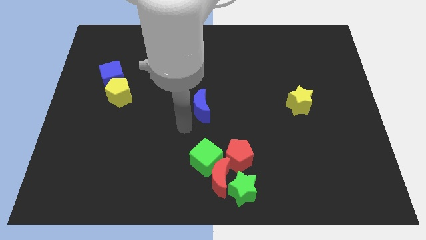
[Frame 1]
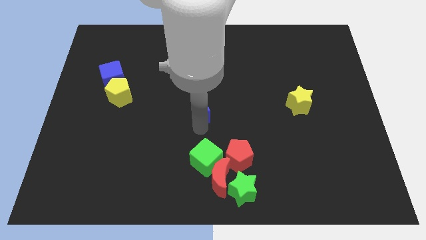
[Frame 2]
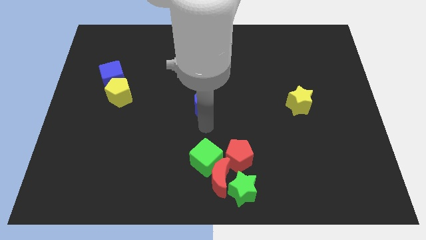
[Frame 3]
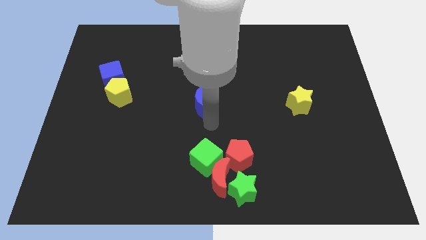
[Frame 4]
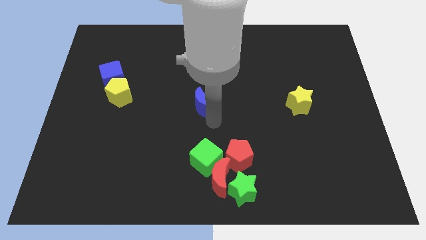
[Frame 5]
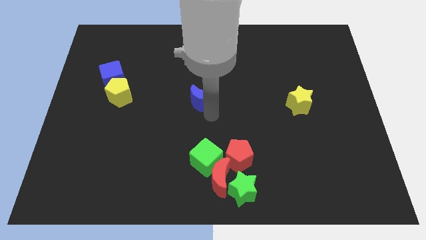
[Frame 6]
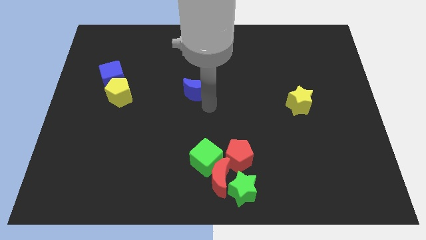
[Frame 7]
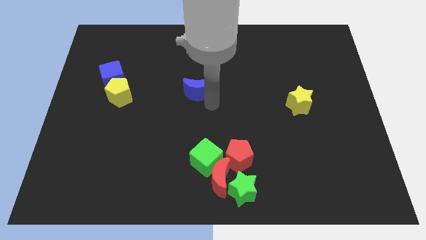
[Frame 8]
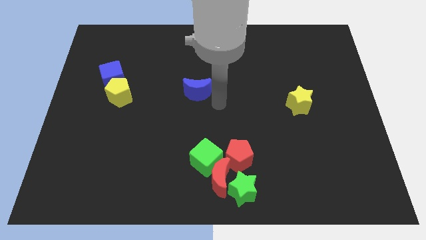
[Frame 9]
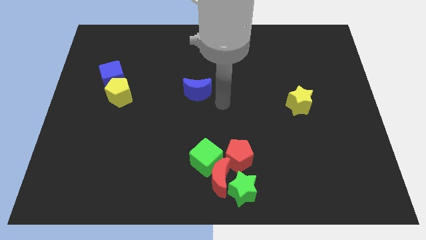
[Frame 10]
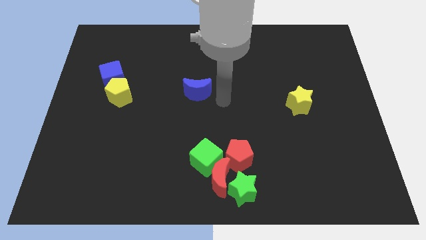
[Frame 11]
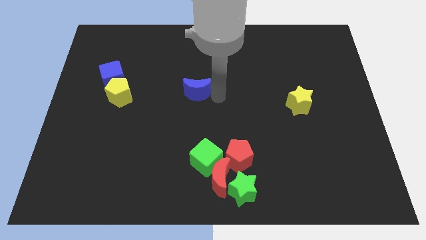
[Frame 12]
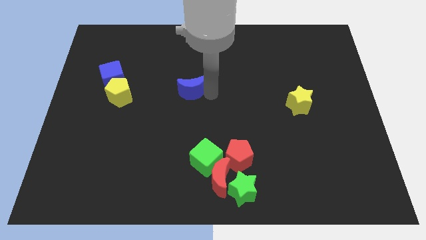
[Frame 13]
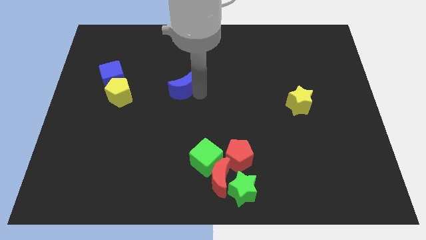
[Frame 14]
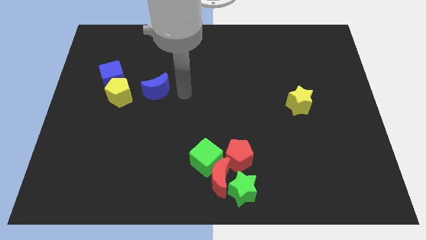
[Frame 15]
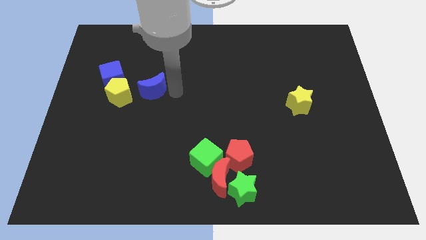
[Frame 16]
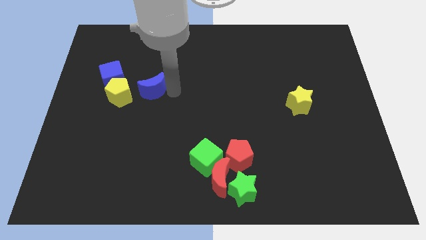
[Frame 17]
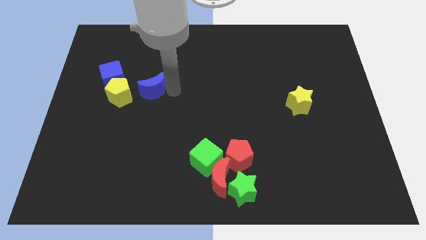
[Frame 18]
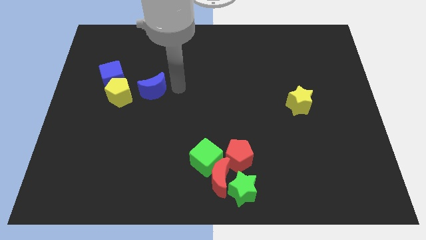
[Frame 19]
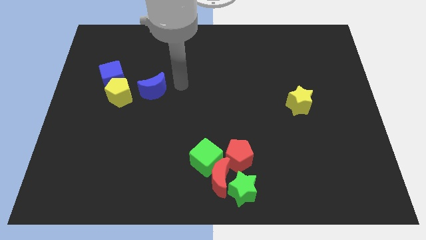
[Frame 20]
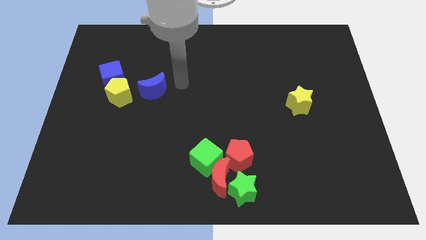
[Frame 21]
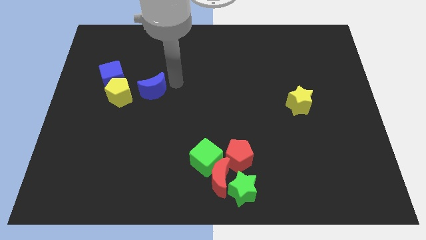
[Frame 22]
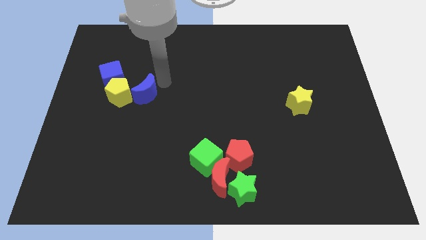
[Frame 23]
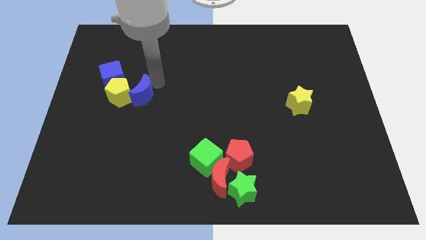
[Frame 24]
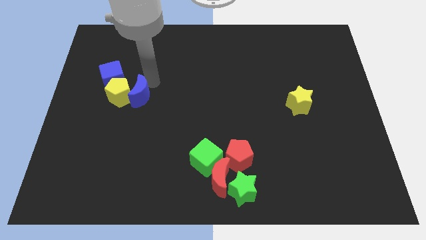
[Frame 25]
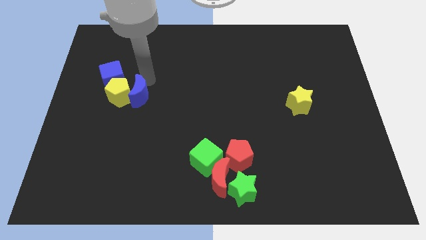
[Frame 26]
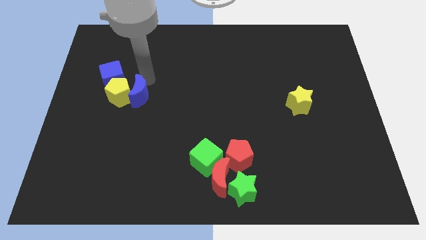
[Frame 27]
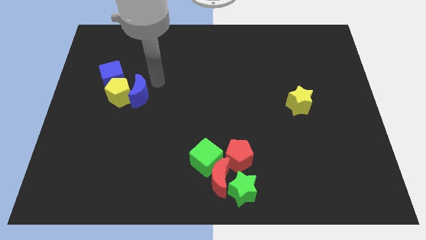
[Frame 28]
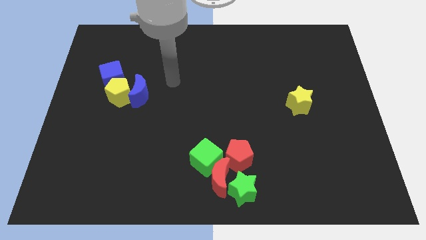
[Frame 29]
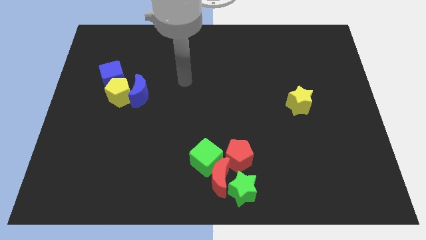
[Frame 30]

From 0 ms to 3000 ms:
move the blue moon to the right of yellow pentagon

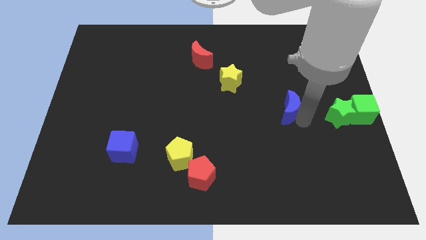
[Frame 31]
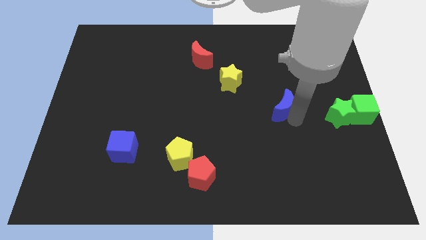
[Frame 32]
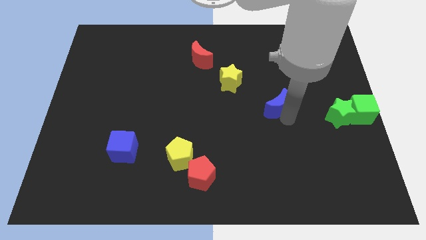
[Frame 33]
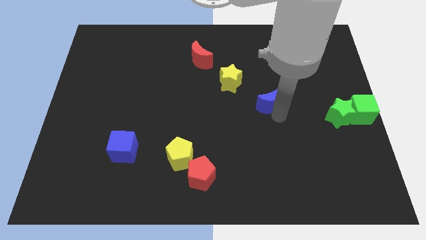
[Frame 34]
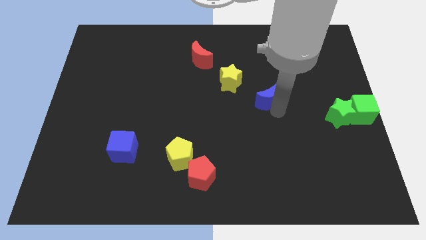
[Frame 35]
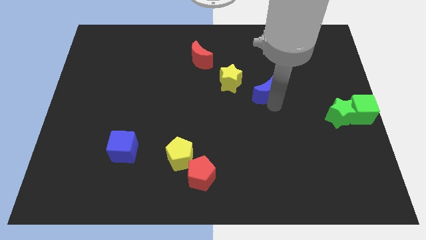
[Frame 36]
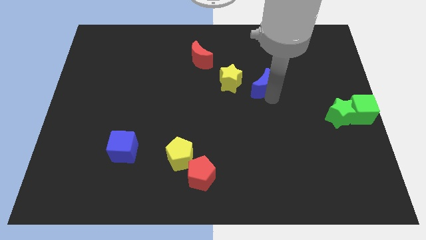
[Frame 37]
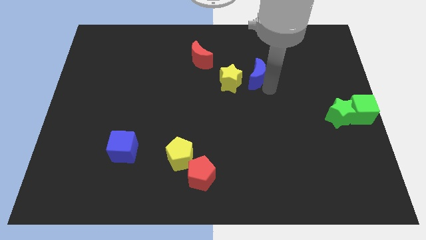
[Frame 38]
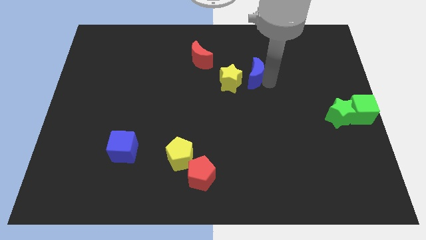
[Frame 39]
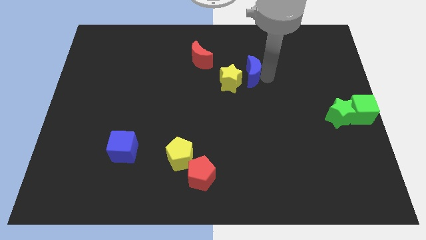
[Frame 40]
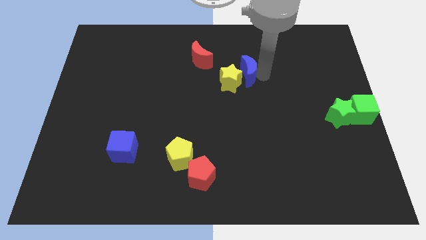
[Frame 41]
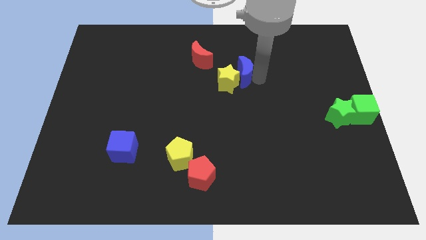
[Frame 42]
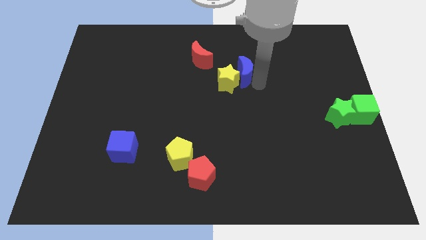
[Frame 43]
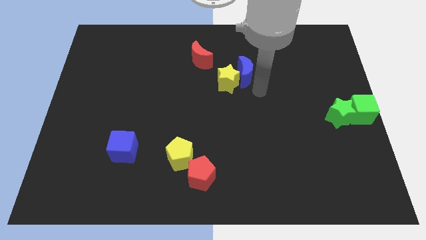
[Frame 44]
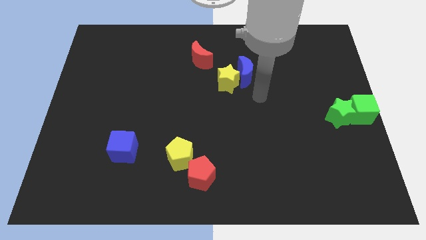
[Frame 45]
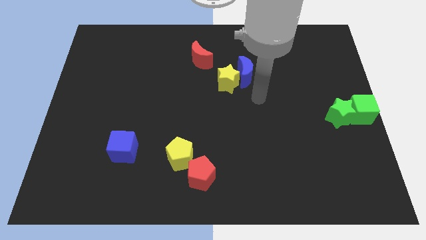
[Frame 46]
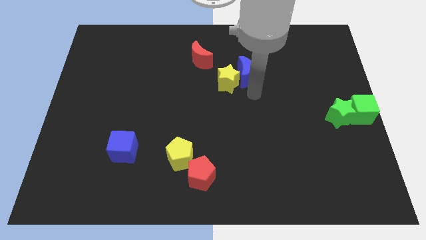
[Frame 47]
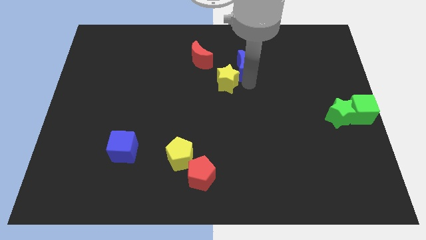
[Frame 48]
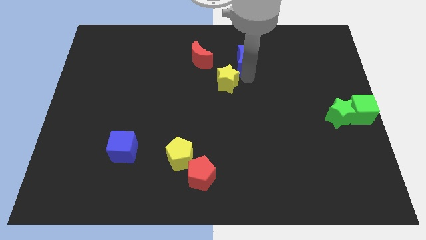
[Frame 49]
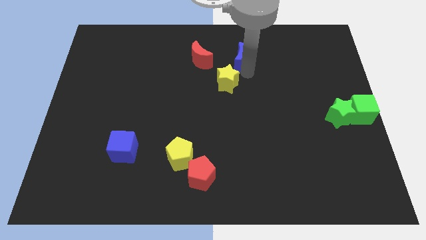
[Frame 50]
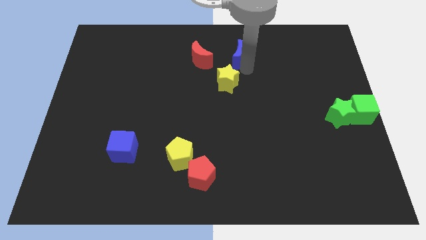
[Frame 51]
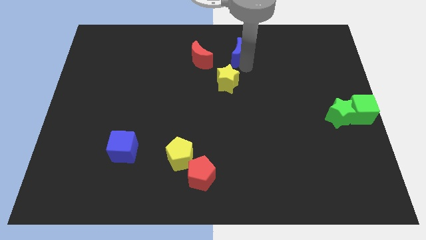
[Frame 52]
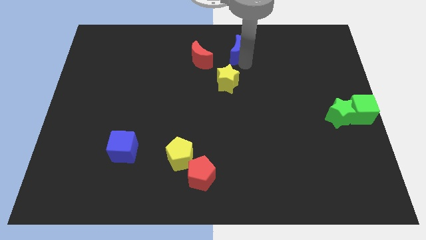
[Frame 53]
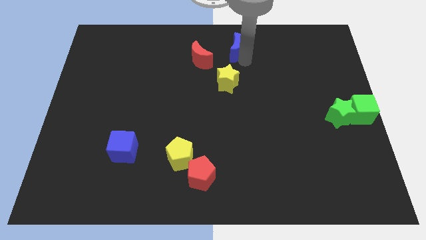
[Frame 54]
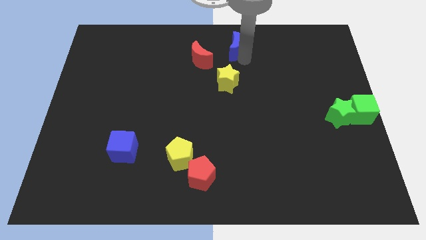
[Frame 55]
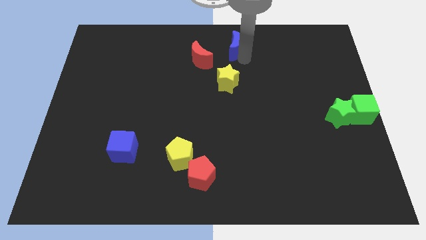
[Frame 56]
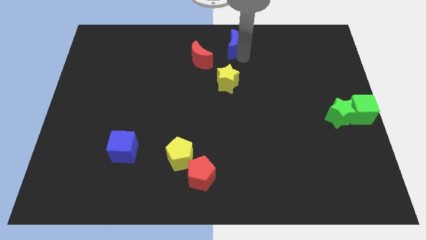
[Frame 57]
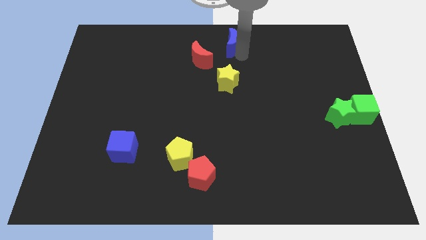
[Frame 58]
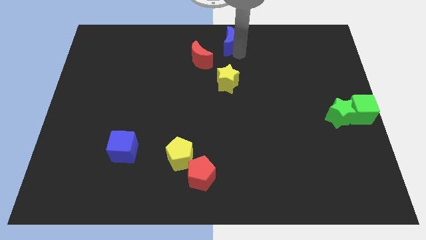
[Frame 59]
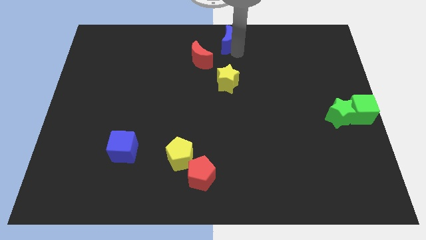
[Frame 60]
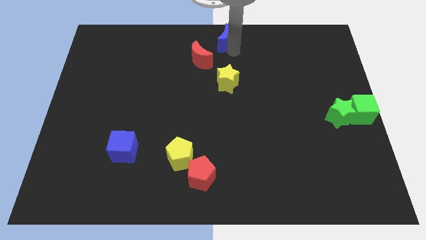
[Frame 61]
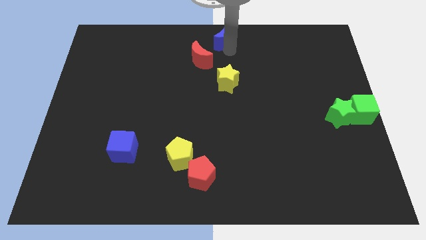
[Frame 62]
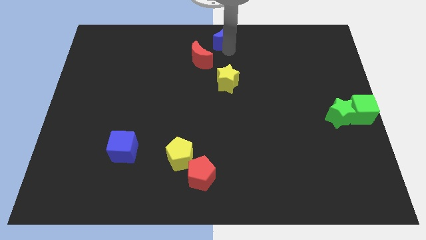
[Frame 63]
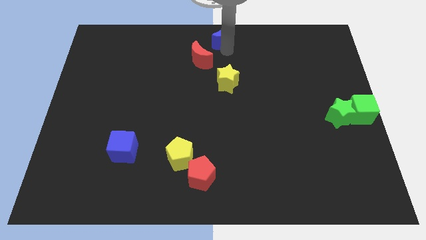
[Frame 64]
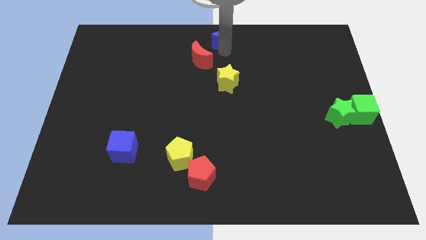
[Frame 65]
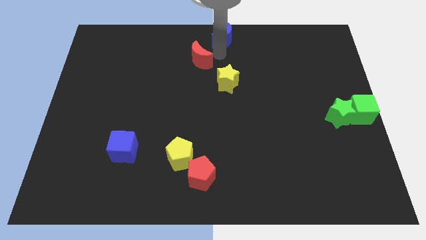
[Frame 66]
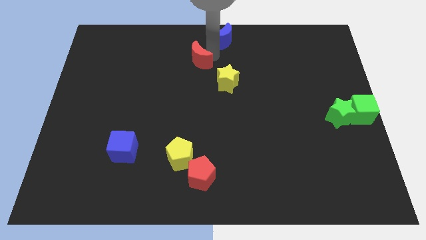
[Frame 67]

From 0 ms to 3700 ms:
move the blue crescent to the top centre of the board

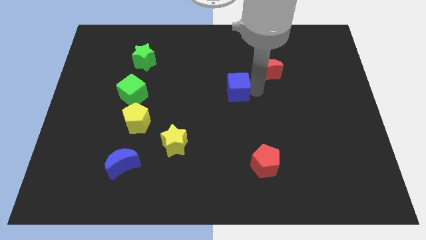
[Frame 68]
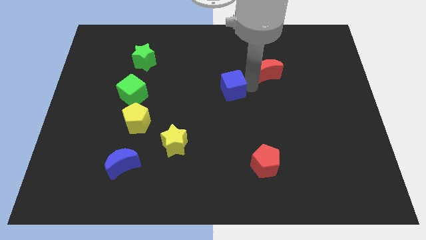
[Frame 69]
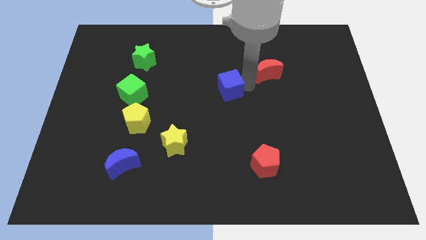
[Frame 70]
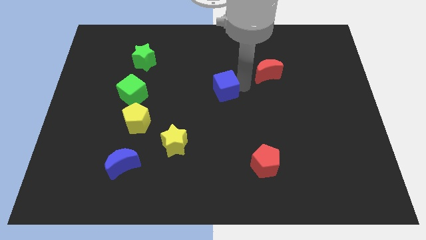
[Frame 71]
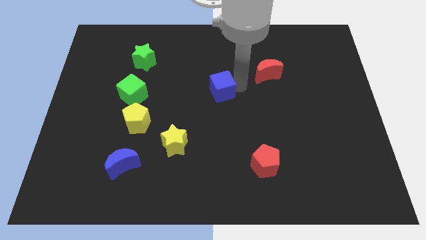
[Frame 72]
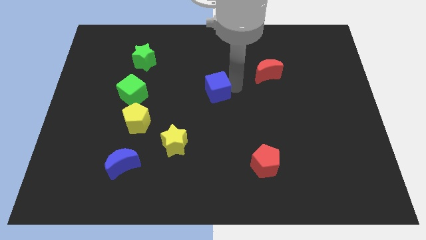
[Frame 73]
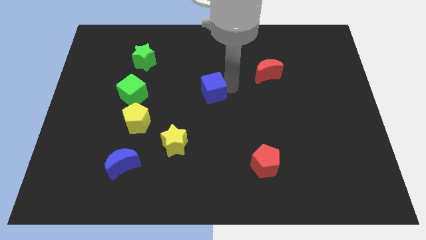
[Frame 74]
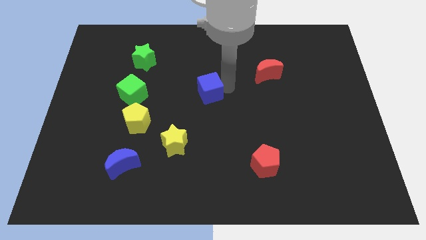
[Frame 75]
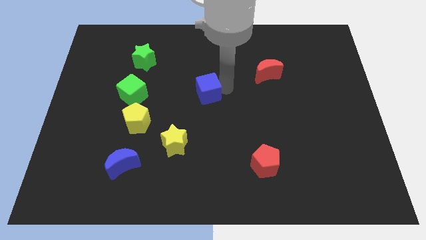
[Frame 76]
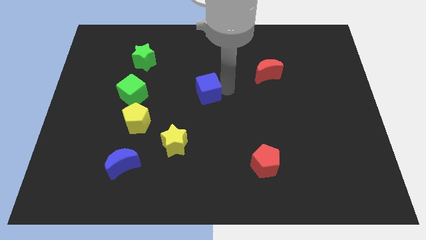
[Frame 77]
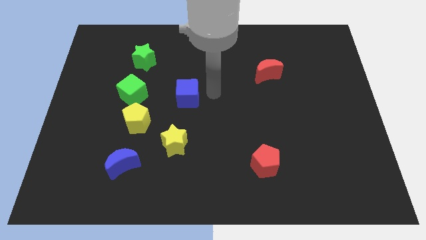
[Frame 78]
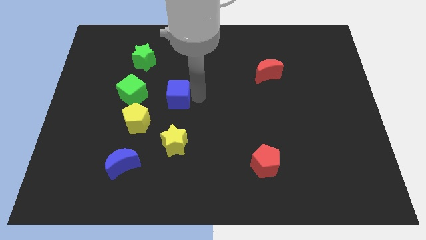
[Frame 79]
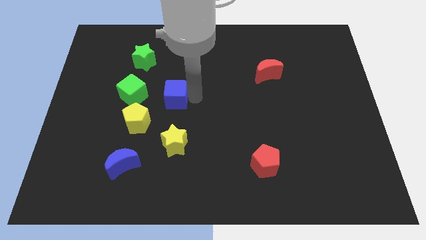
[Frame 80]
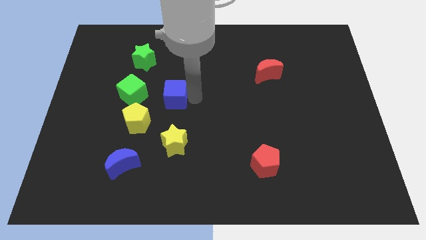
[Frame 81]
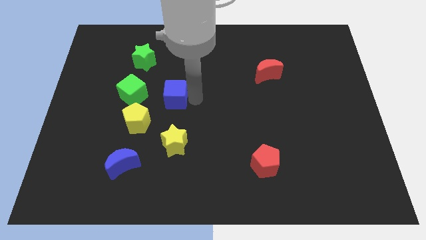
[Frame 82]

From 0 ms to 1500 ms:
push the blue cube towards the right side of the green cube

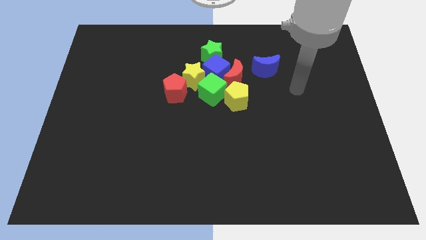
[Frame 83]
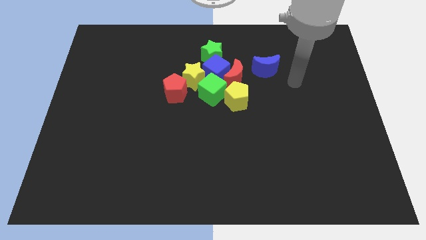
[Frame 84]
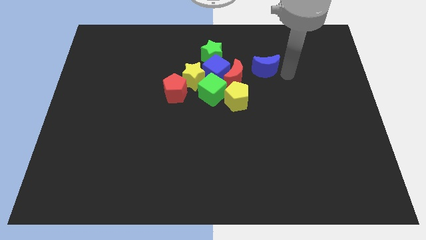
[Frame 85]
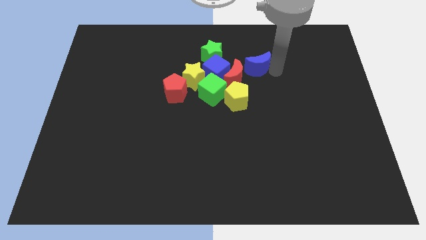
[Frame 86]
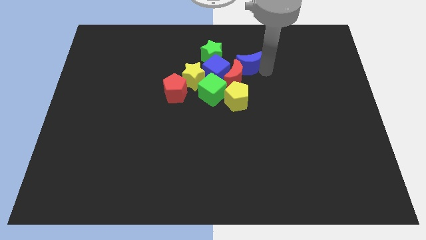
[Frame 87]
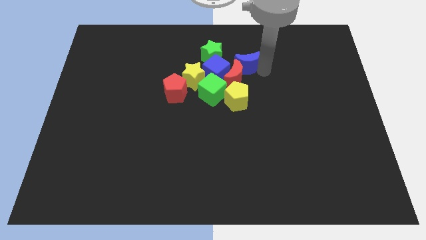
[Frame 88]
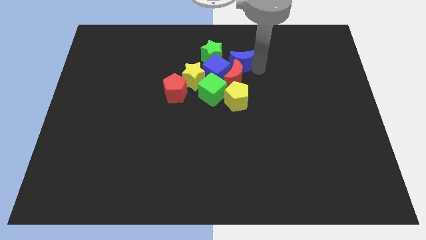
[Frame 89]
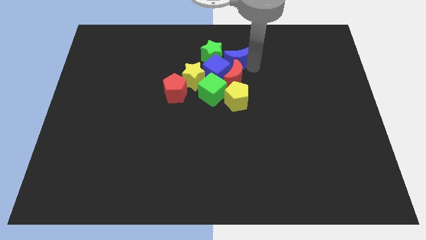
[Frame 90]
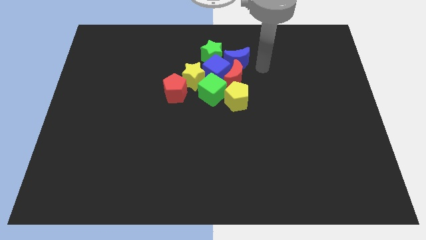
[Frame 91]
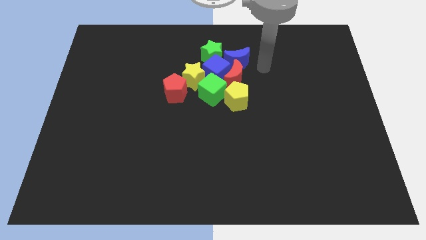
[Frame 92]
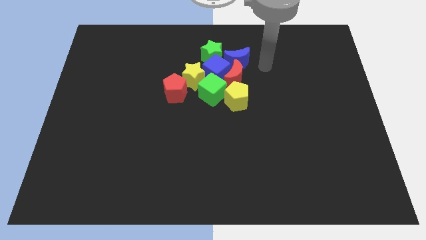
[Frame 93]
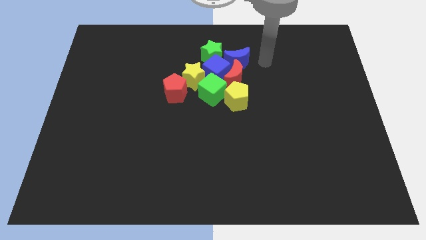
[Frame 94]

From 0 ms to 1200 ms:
move the blue crescent to the right of the green star
